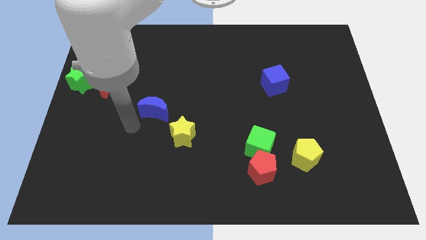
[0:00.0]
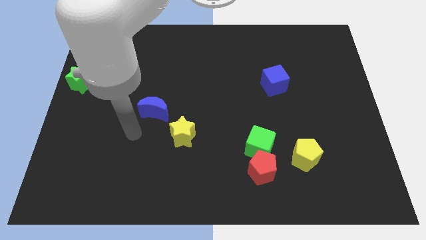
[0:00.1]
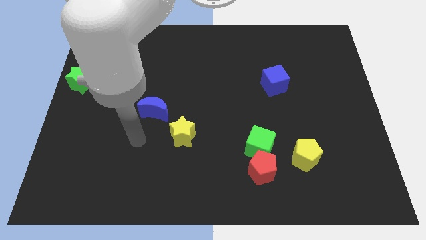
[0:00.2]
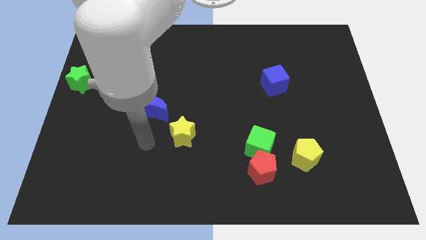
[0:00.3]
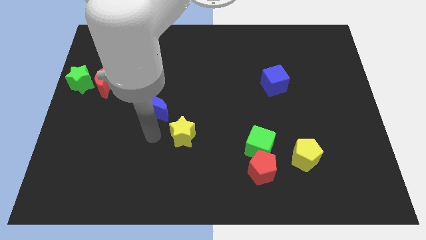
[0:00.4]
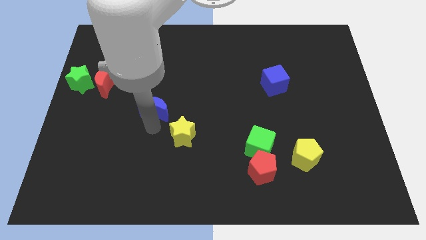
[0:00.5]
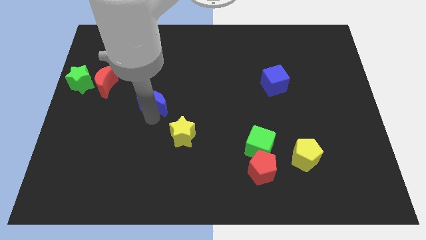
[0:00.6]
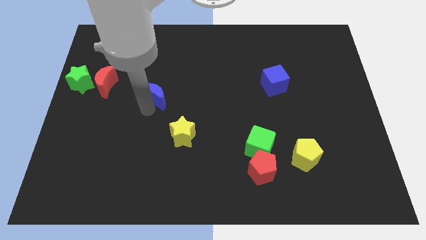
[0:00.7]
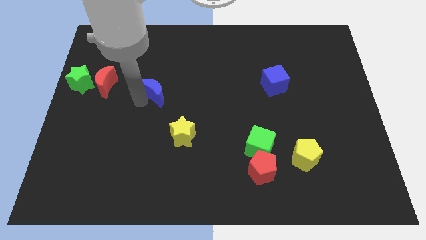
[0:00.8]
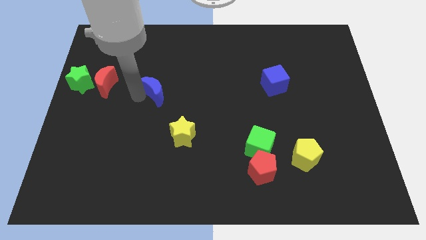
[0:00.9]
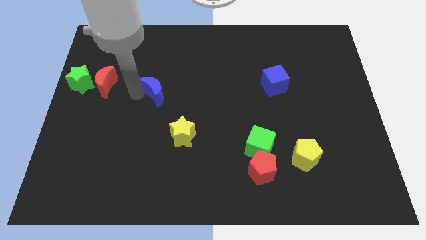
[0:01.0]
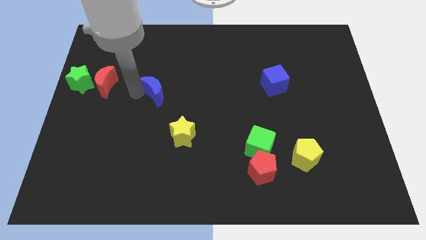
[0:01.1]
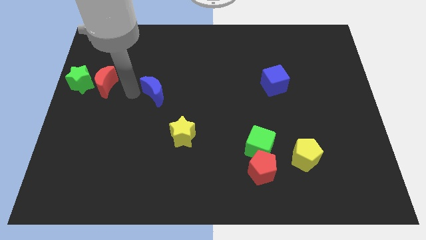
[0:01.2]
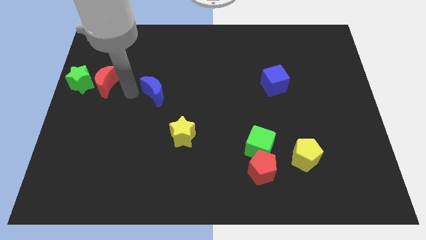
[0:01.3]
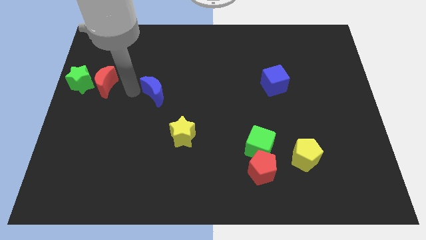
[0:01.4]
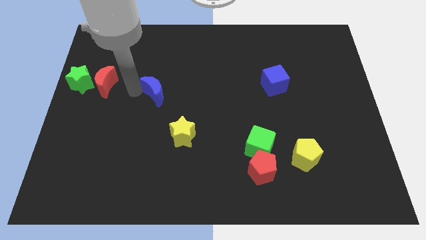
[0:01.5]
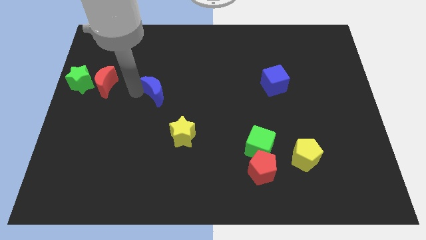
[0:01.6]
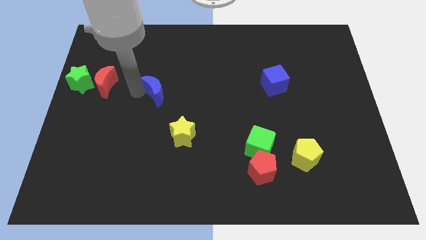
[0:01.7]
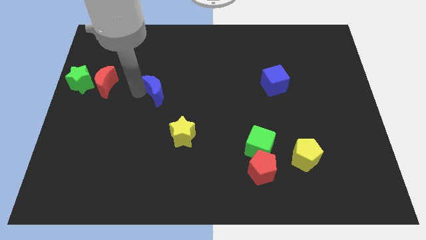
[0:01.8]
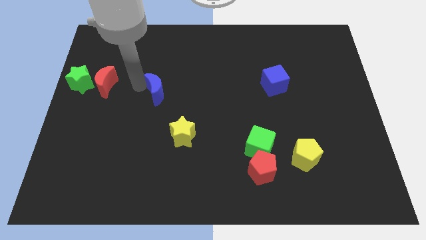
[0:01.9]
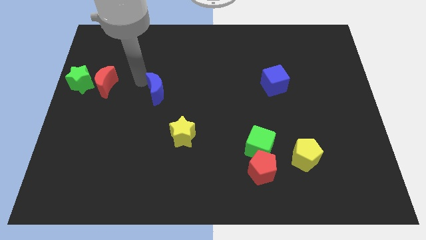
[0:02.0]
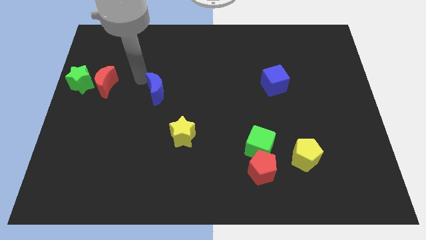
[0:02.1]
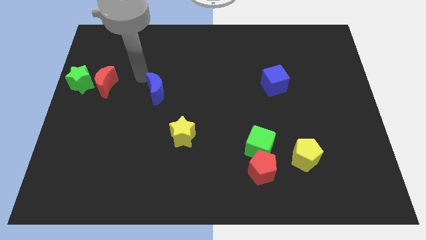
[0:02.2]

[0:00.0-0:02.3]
place the blue moon to the parallel right of the red moon

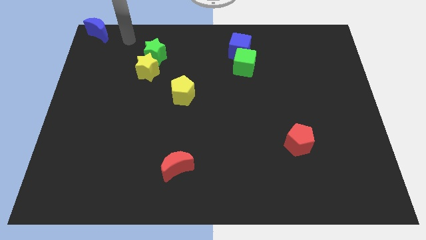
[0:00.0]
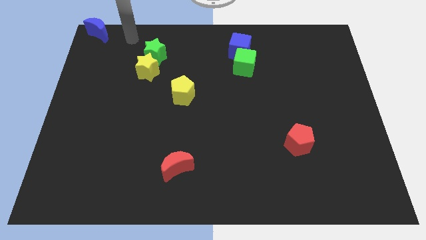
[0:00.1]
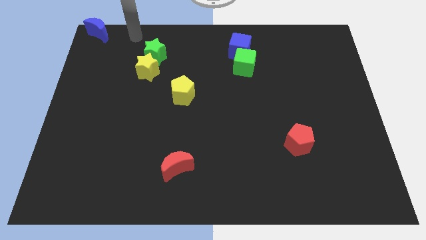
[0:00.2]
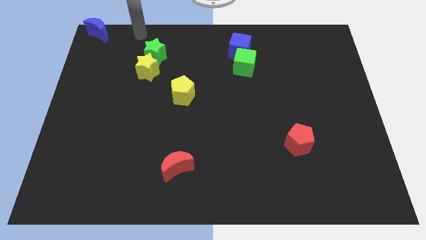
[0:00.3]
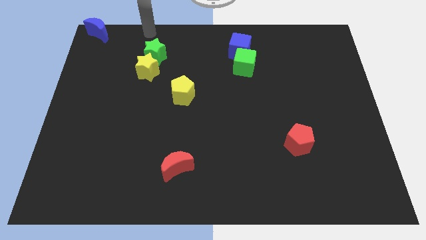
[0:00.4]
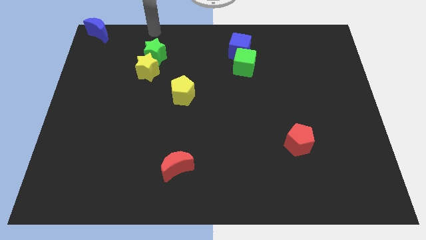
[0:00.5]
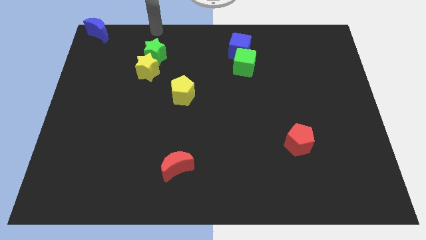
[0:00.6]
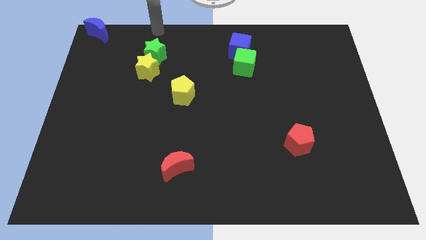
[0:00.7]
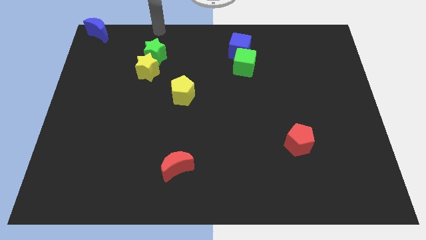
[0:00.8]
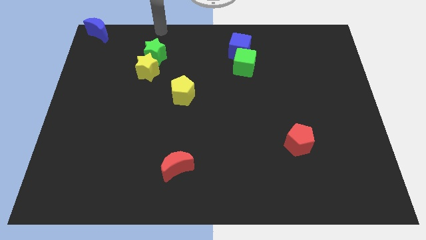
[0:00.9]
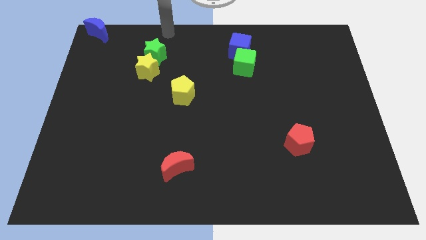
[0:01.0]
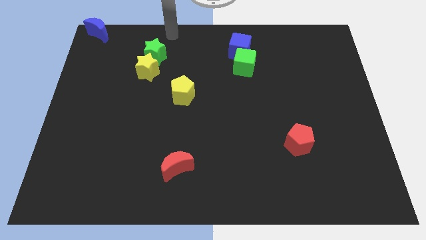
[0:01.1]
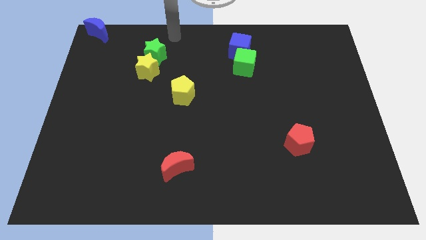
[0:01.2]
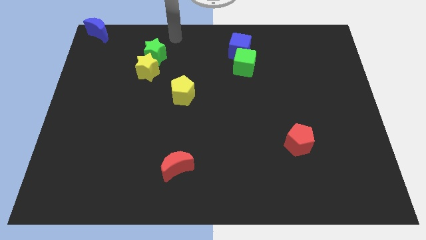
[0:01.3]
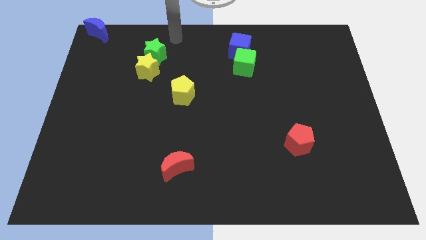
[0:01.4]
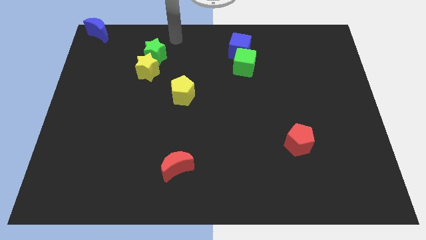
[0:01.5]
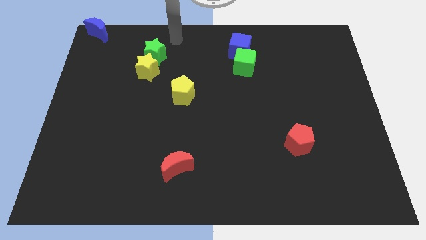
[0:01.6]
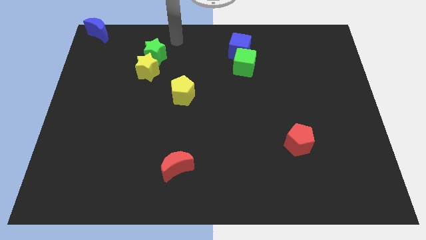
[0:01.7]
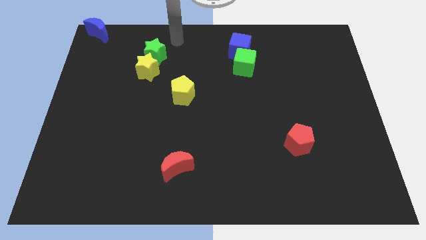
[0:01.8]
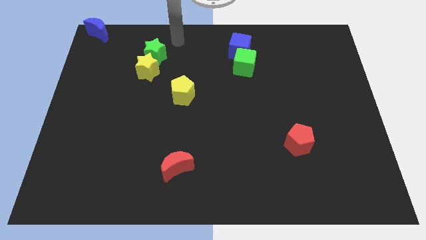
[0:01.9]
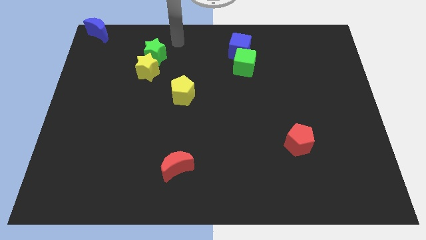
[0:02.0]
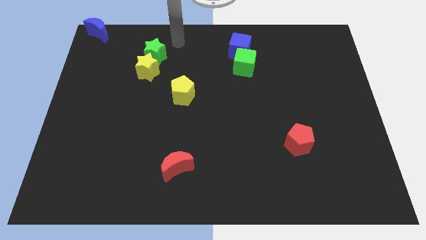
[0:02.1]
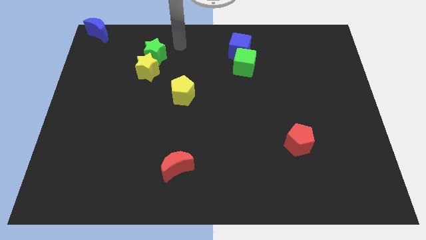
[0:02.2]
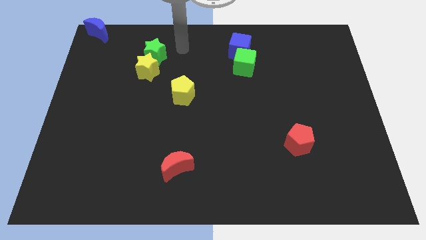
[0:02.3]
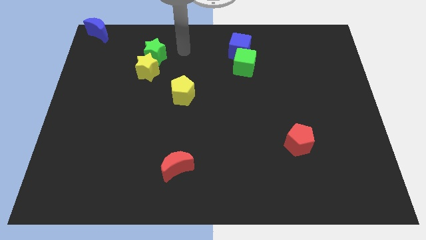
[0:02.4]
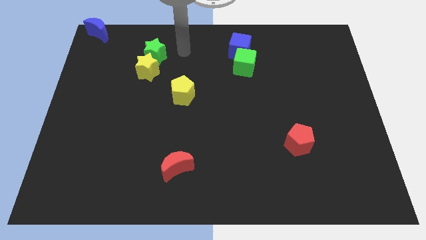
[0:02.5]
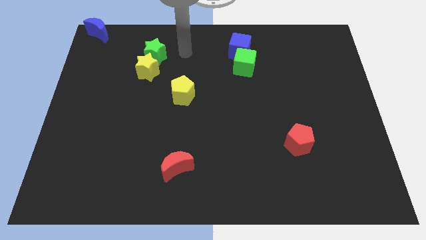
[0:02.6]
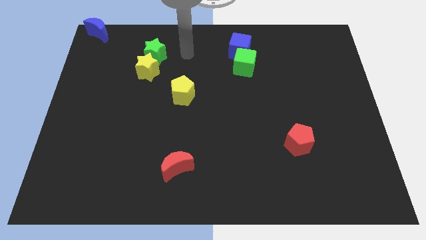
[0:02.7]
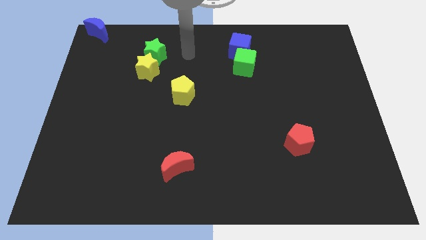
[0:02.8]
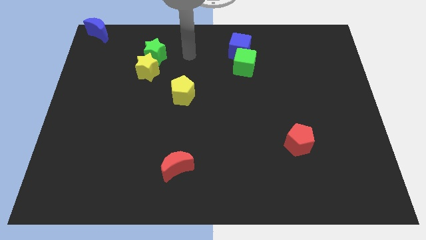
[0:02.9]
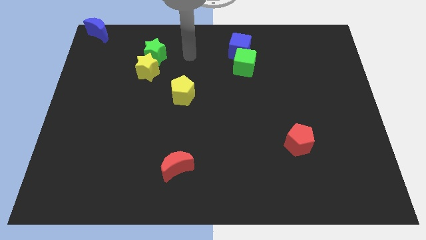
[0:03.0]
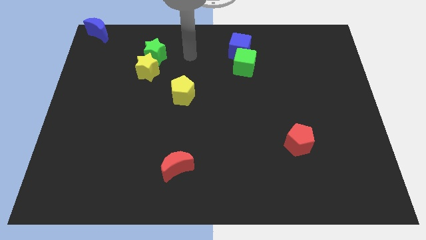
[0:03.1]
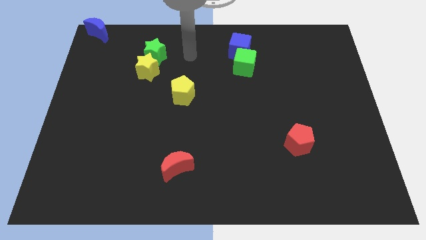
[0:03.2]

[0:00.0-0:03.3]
move the arm diagonal to the top of yellow pentagon

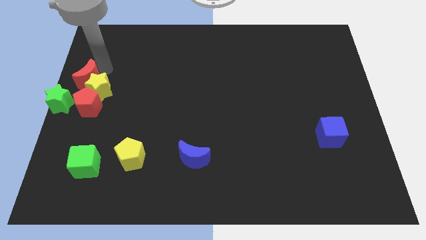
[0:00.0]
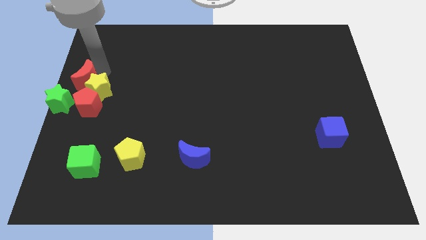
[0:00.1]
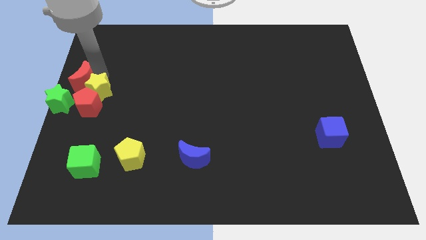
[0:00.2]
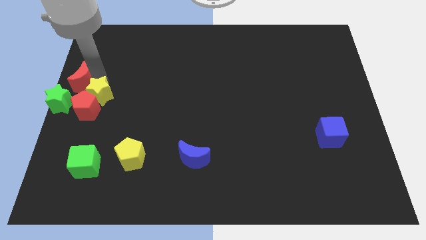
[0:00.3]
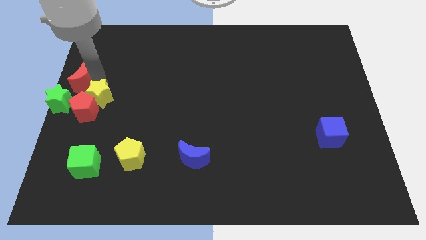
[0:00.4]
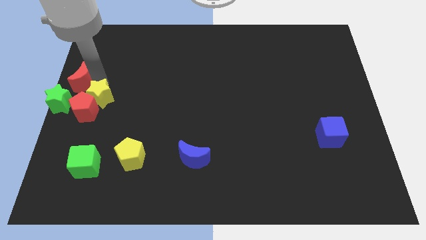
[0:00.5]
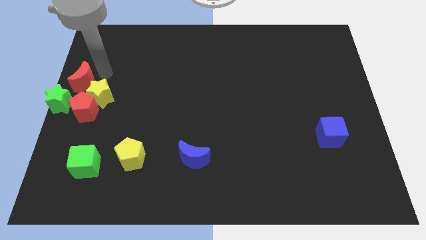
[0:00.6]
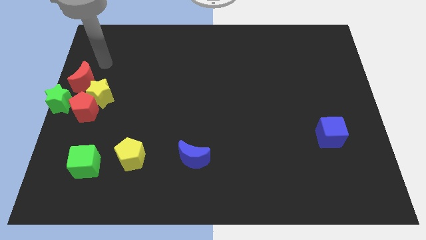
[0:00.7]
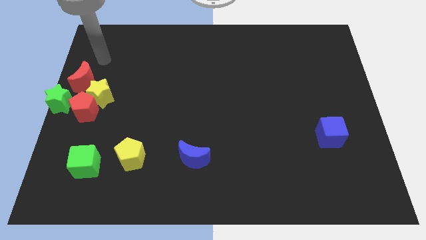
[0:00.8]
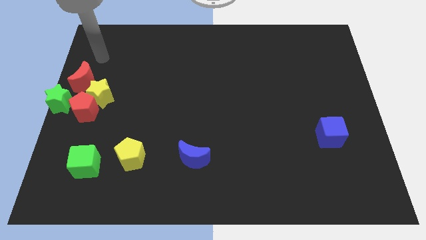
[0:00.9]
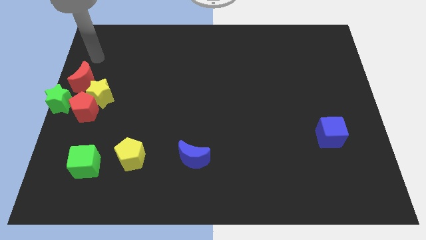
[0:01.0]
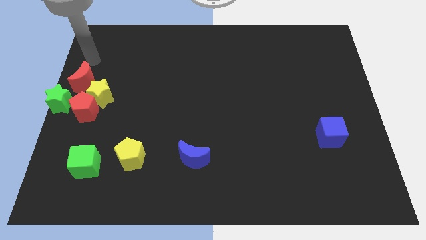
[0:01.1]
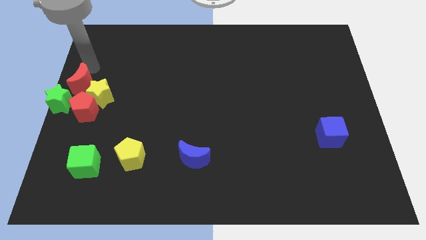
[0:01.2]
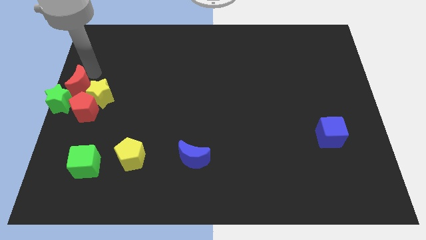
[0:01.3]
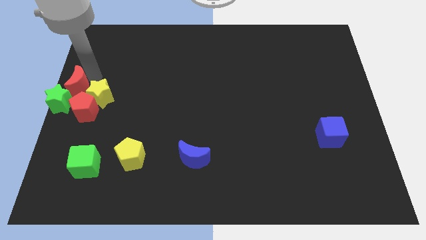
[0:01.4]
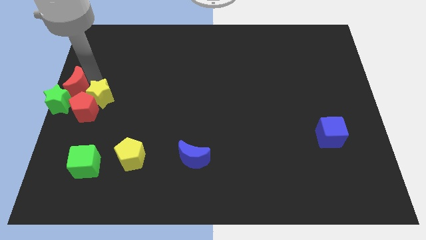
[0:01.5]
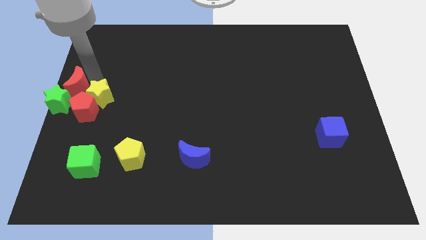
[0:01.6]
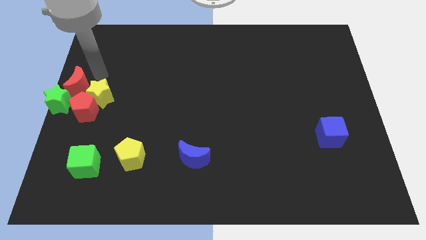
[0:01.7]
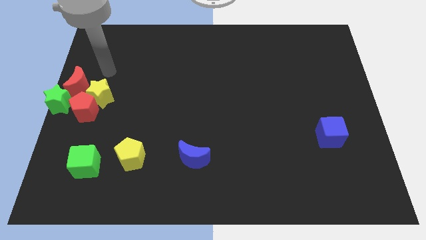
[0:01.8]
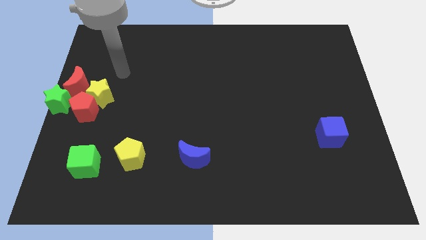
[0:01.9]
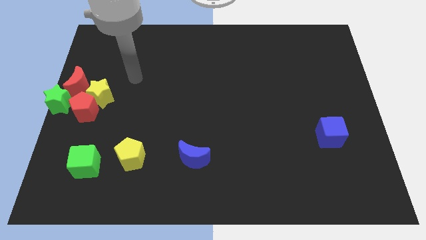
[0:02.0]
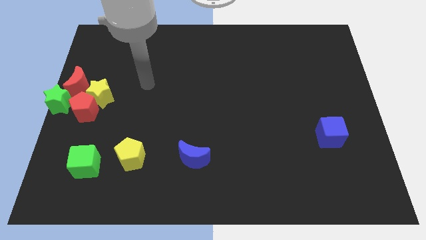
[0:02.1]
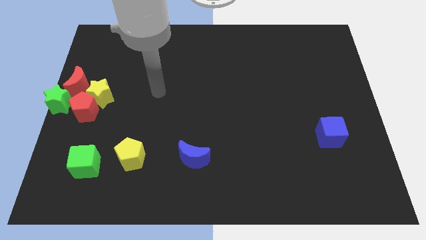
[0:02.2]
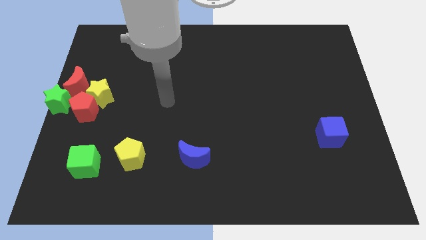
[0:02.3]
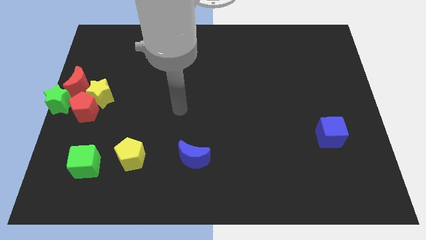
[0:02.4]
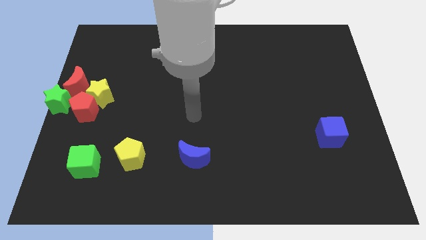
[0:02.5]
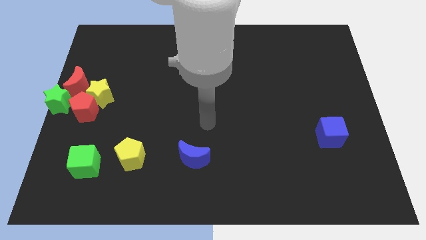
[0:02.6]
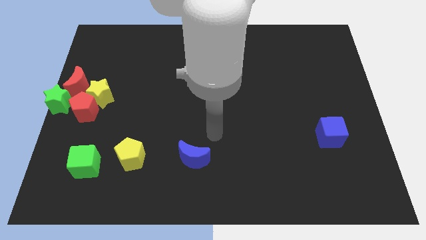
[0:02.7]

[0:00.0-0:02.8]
push the red crescent into the green star

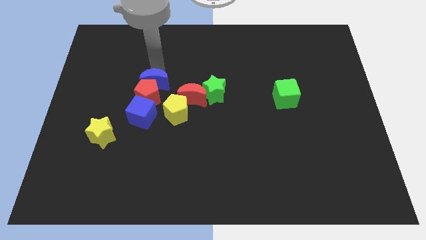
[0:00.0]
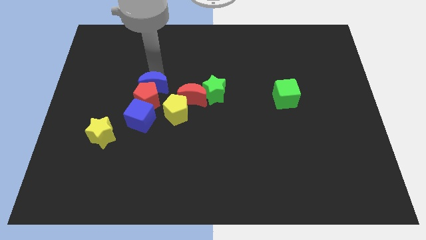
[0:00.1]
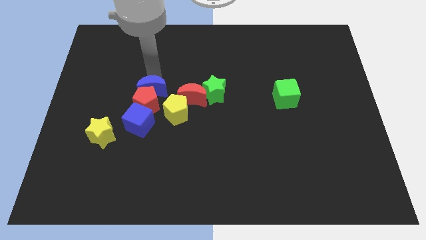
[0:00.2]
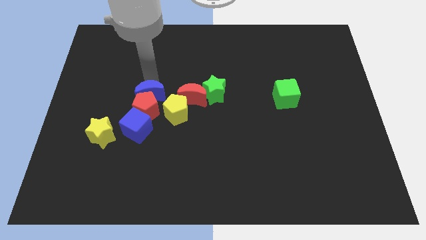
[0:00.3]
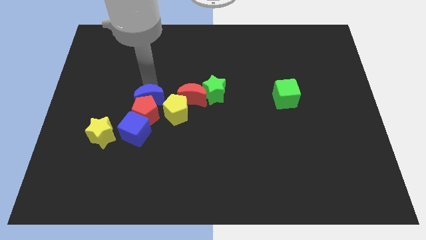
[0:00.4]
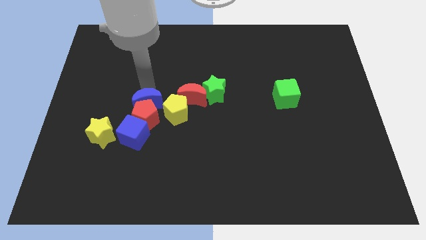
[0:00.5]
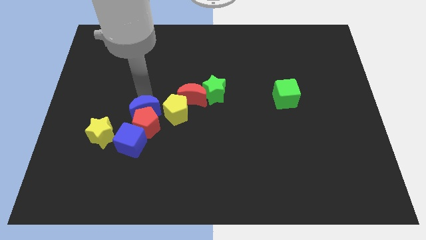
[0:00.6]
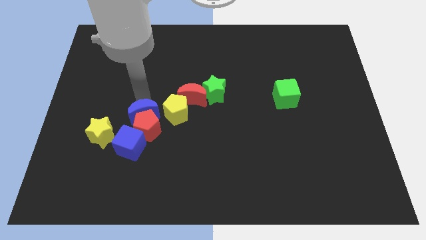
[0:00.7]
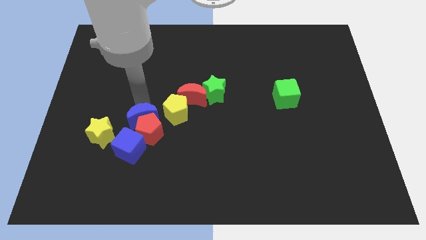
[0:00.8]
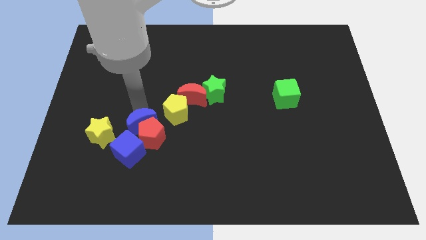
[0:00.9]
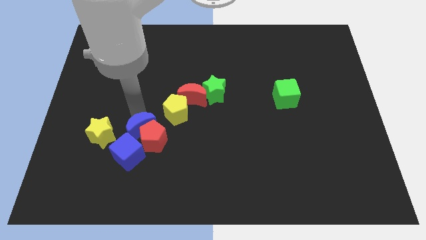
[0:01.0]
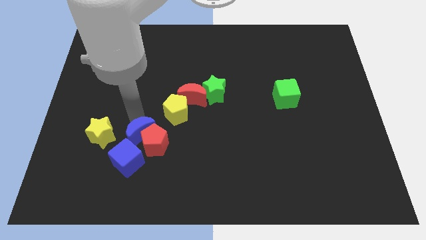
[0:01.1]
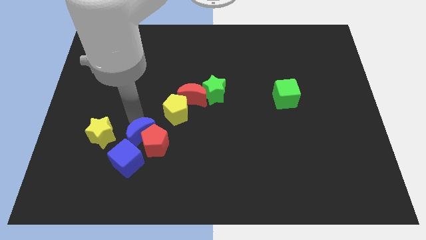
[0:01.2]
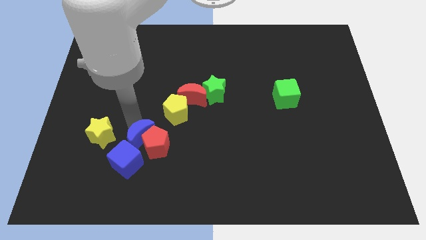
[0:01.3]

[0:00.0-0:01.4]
push a group of blocks downward
